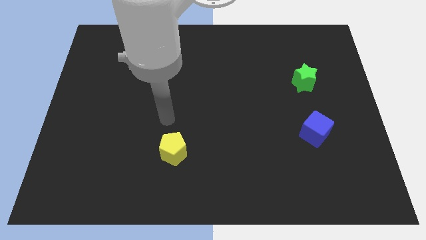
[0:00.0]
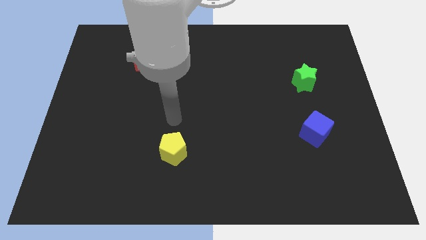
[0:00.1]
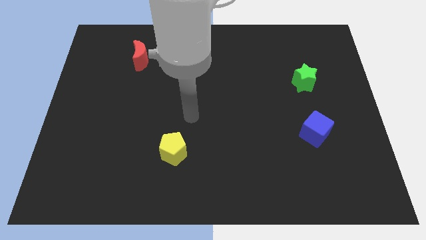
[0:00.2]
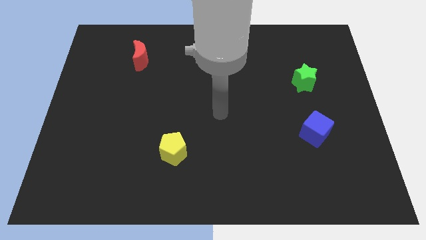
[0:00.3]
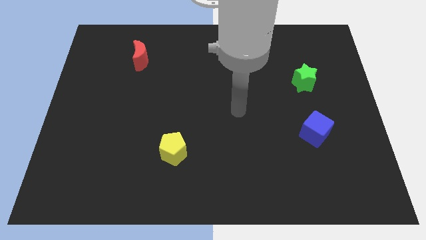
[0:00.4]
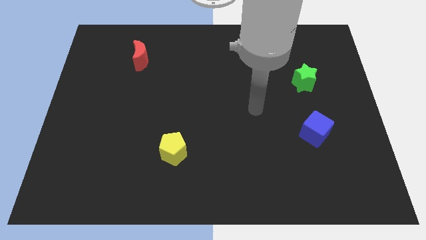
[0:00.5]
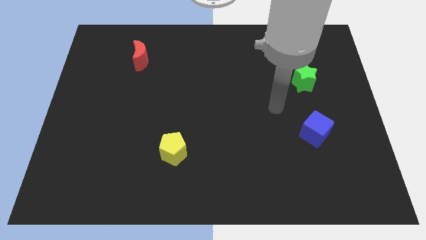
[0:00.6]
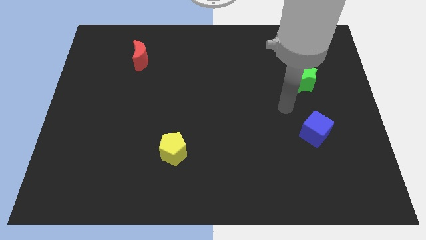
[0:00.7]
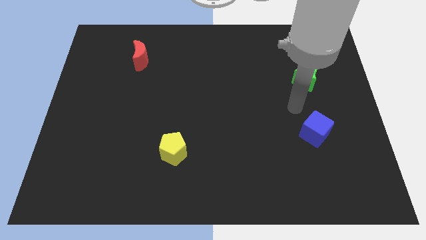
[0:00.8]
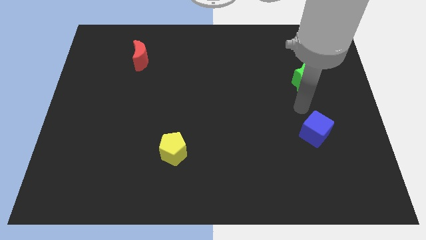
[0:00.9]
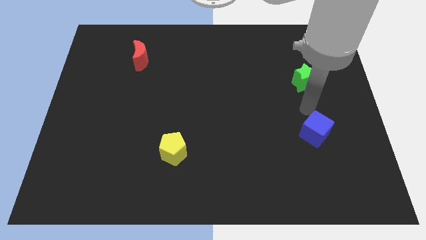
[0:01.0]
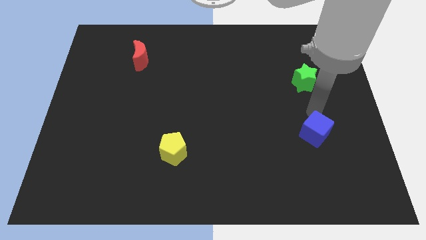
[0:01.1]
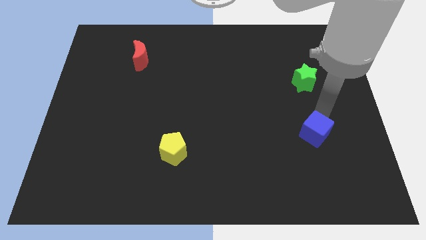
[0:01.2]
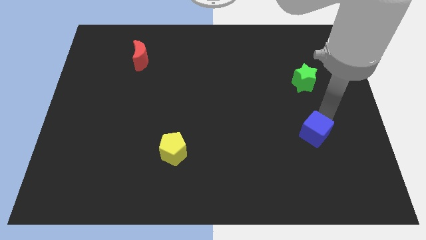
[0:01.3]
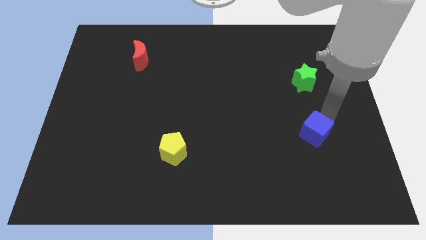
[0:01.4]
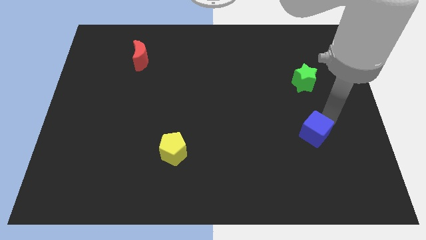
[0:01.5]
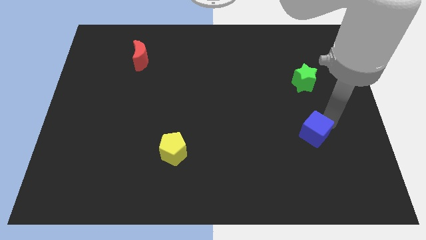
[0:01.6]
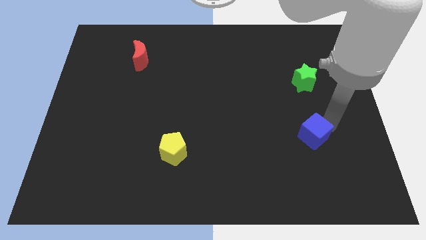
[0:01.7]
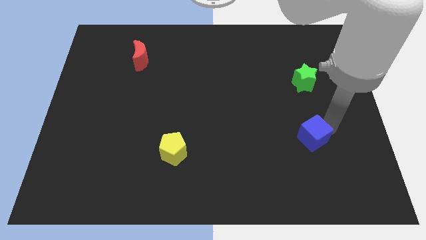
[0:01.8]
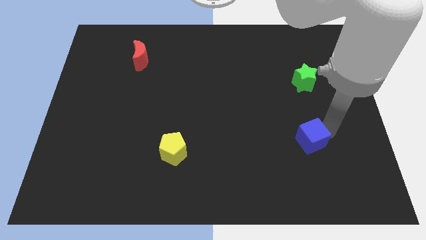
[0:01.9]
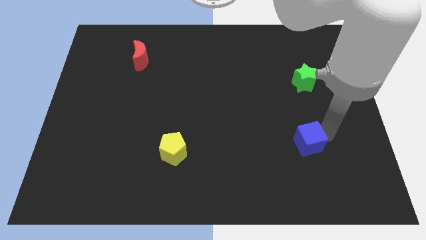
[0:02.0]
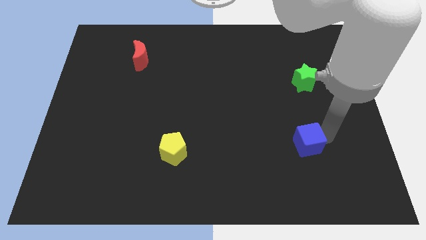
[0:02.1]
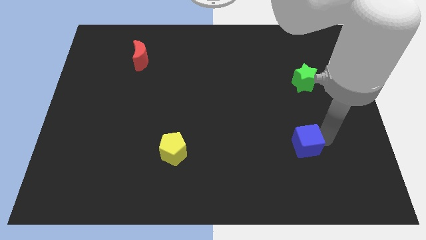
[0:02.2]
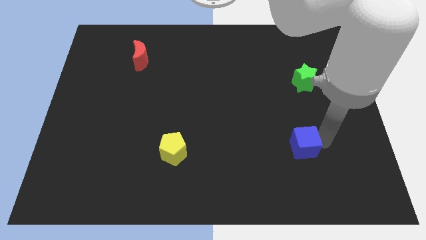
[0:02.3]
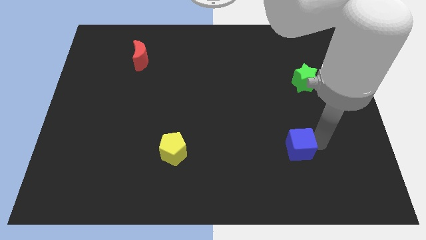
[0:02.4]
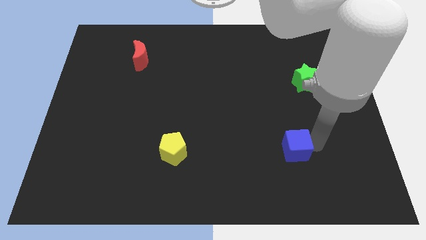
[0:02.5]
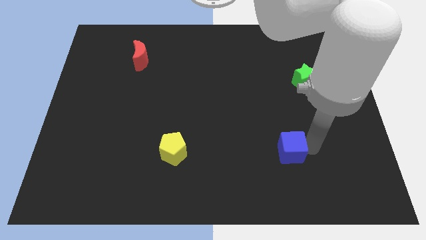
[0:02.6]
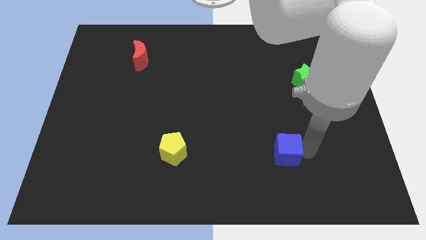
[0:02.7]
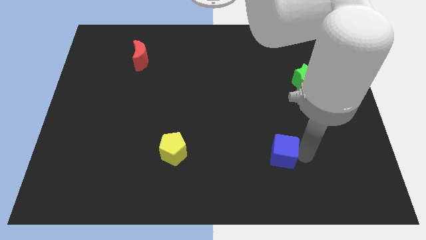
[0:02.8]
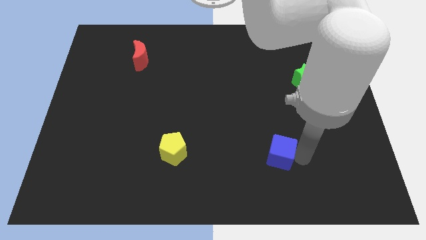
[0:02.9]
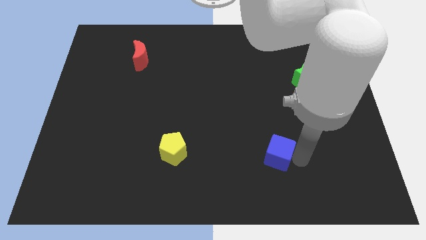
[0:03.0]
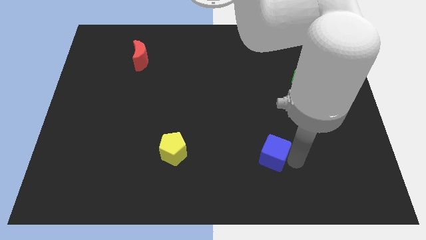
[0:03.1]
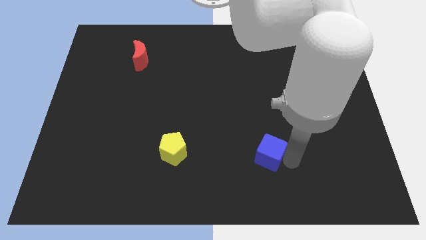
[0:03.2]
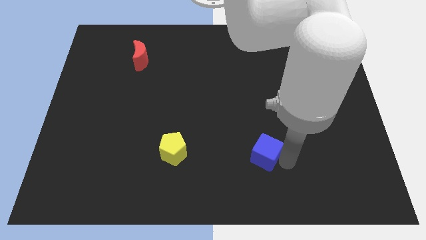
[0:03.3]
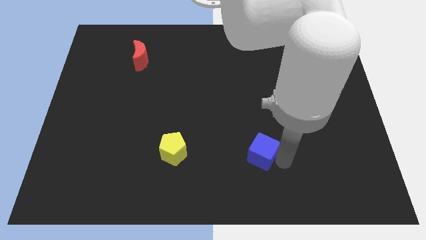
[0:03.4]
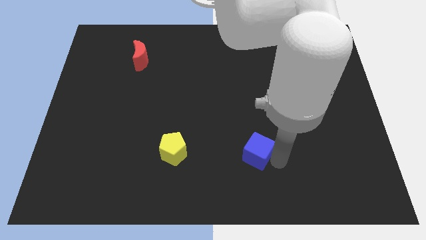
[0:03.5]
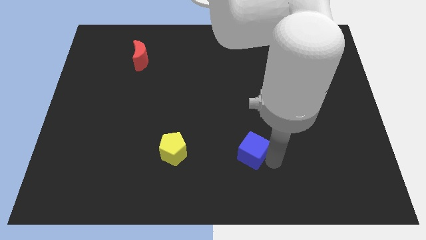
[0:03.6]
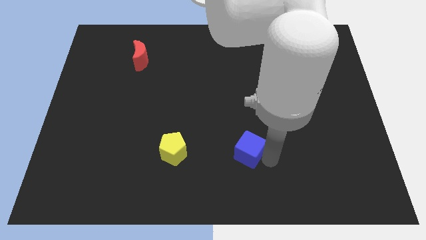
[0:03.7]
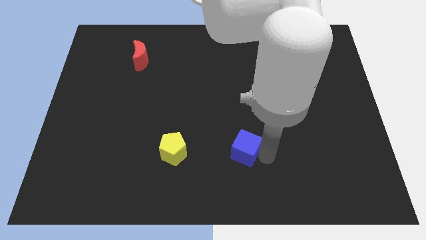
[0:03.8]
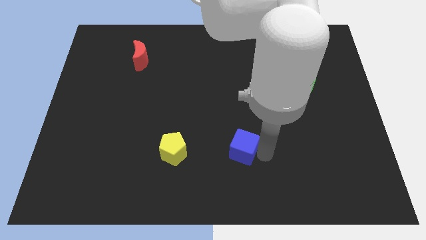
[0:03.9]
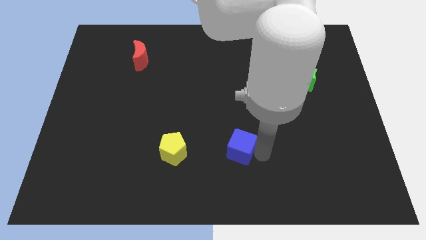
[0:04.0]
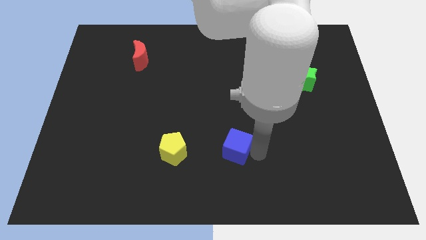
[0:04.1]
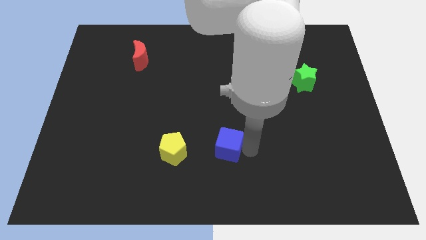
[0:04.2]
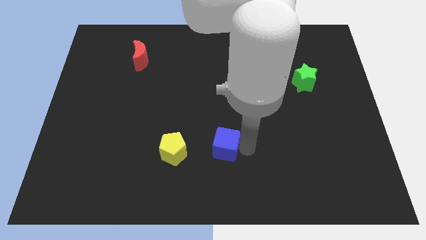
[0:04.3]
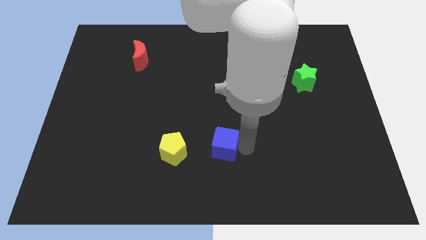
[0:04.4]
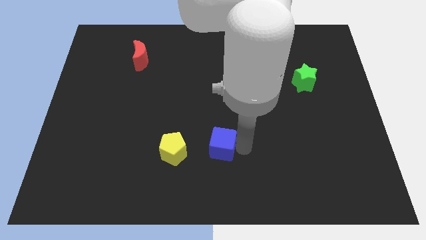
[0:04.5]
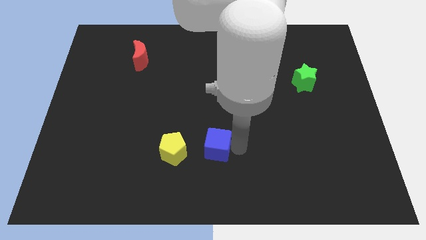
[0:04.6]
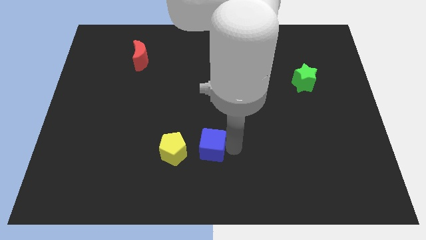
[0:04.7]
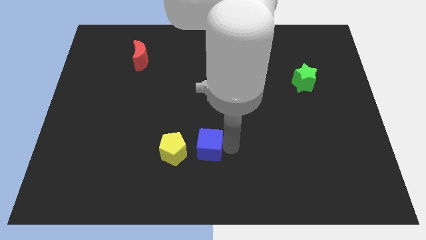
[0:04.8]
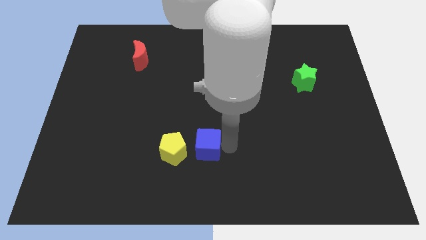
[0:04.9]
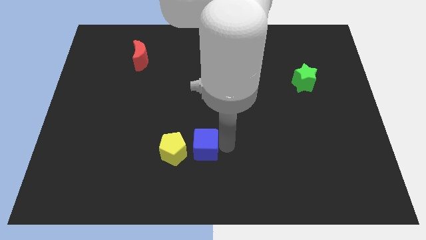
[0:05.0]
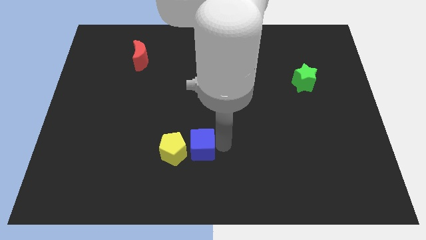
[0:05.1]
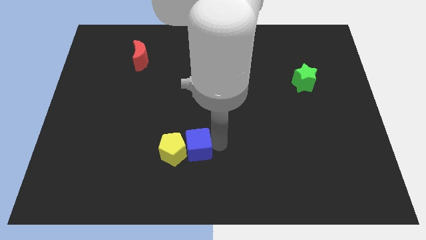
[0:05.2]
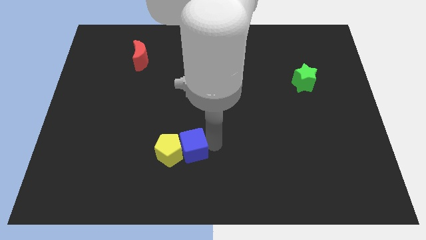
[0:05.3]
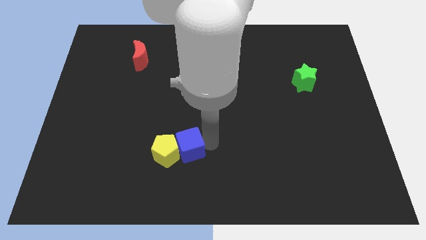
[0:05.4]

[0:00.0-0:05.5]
slide the blue block to the pentagon

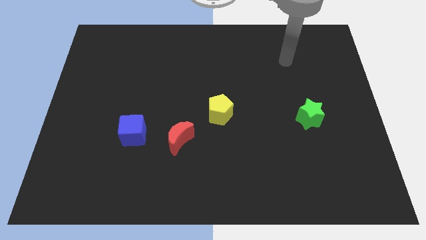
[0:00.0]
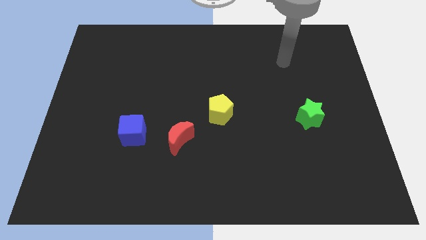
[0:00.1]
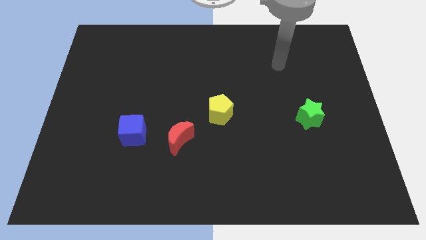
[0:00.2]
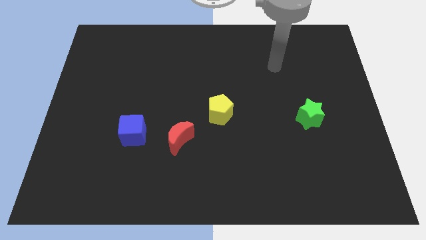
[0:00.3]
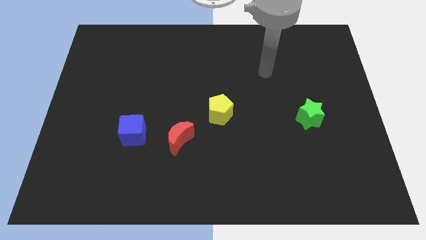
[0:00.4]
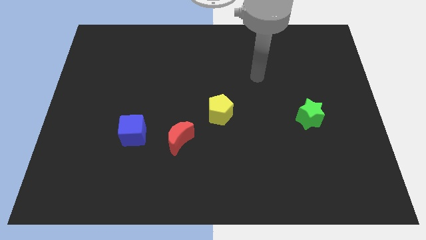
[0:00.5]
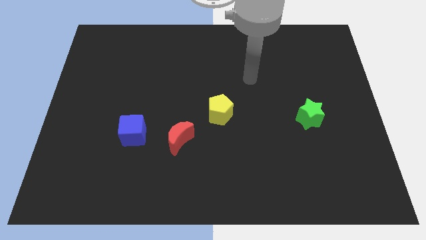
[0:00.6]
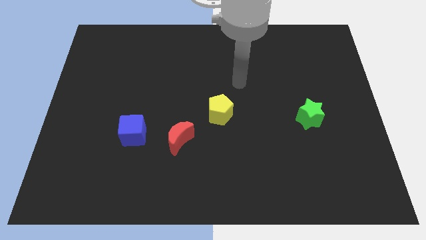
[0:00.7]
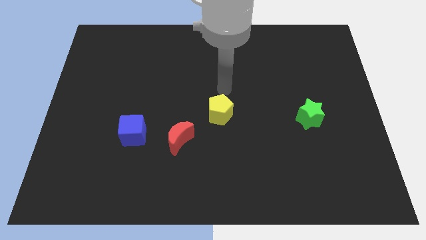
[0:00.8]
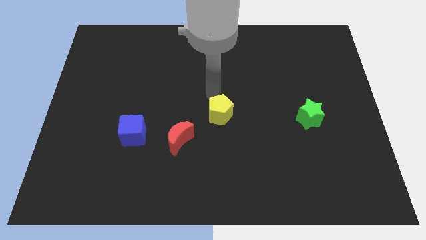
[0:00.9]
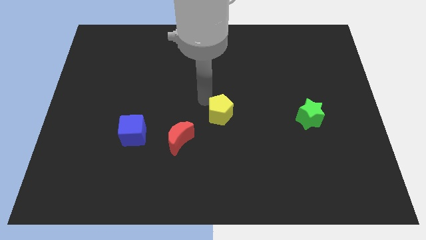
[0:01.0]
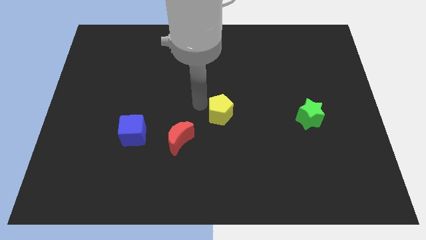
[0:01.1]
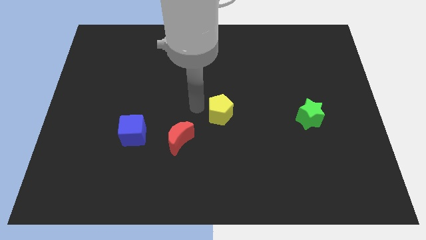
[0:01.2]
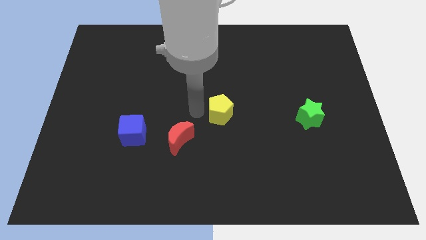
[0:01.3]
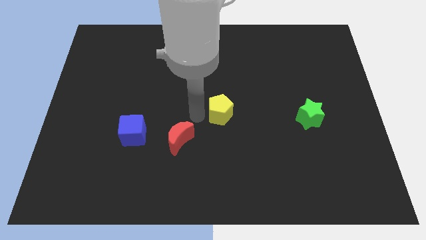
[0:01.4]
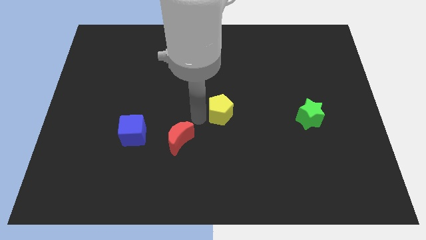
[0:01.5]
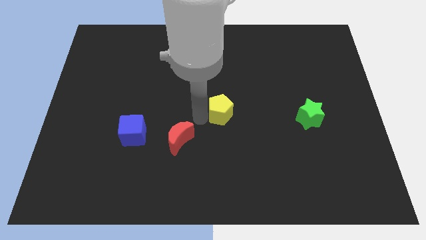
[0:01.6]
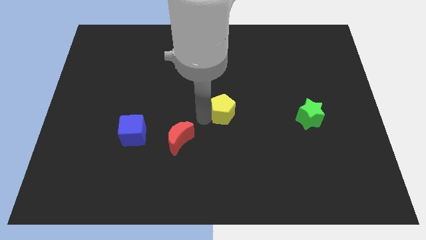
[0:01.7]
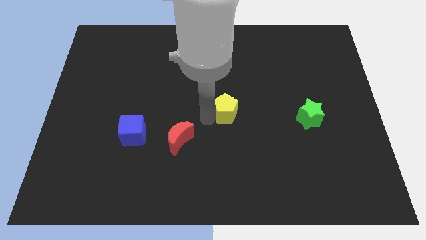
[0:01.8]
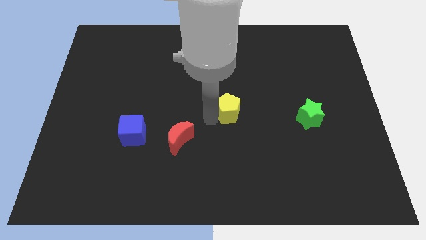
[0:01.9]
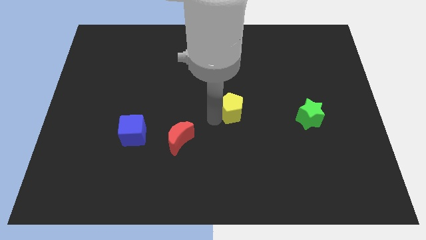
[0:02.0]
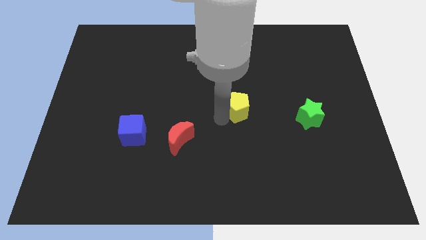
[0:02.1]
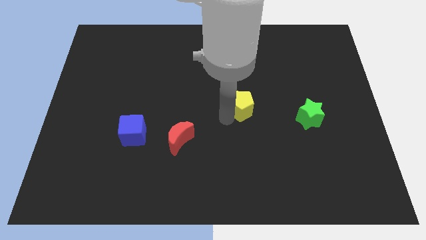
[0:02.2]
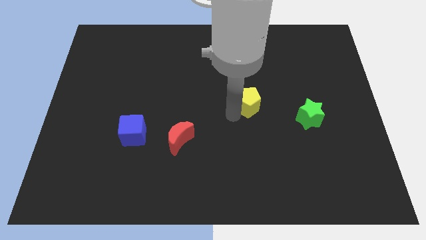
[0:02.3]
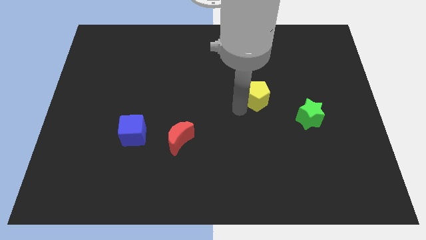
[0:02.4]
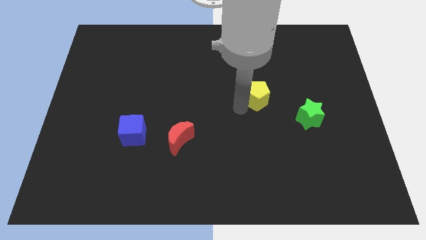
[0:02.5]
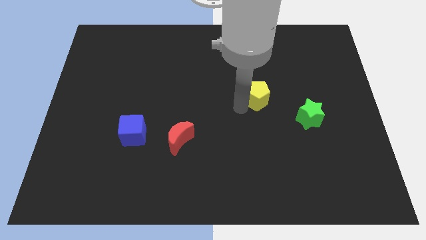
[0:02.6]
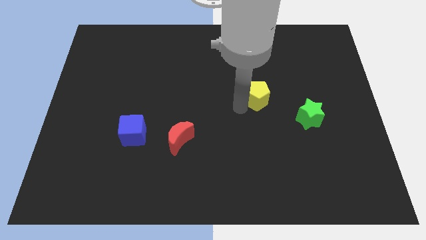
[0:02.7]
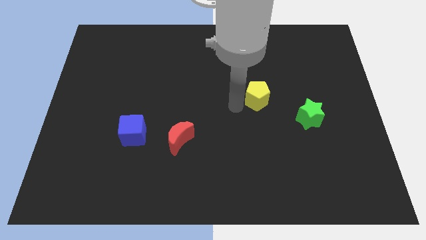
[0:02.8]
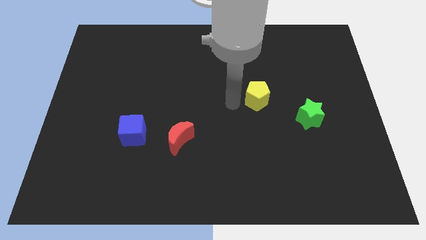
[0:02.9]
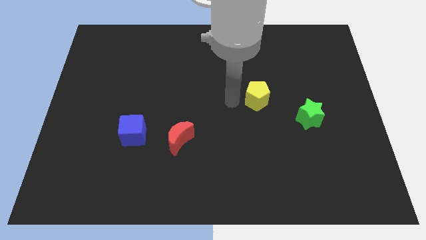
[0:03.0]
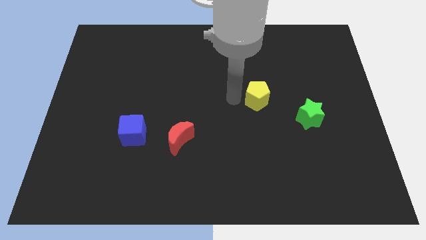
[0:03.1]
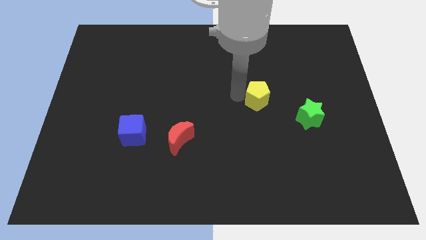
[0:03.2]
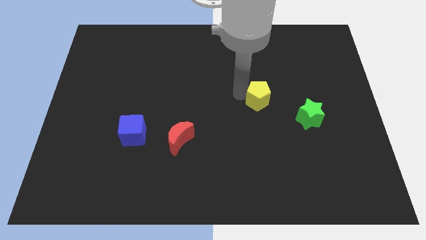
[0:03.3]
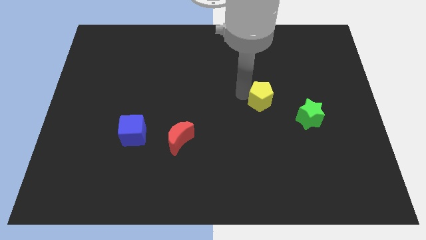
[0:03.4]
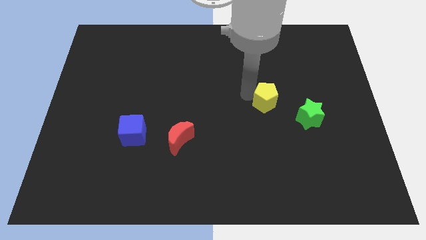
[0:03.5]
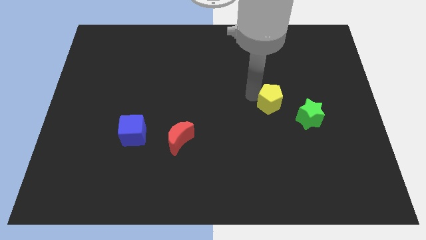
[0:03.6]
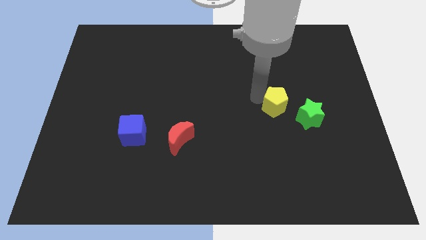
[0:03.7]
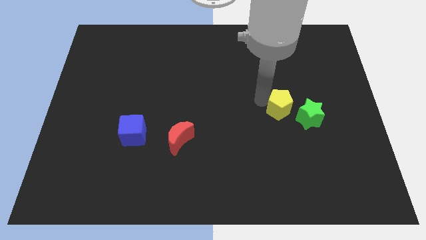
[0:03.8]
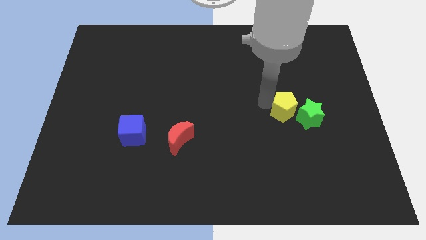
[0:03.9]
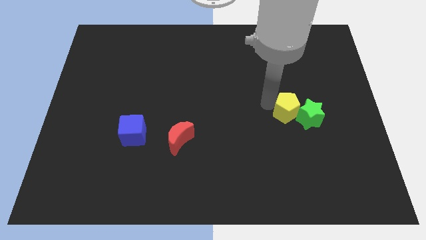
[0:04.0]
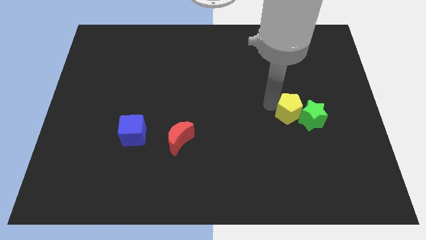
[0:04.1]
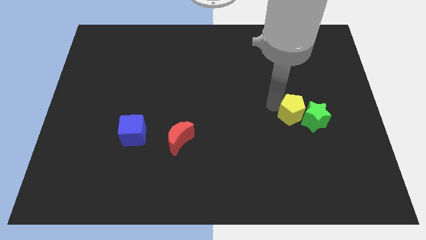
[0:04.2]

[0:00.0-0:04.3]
put the yellow block next to the star
